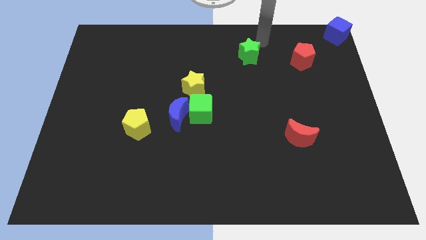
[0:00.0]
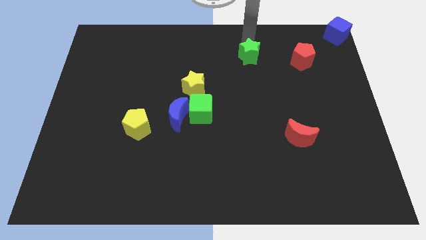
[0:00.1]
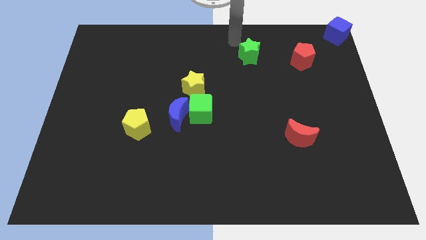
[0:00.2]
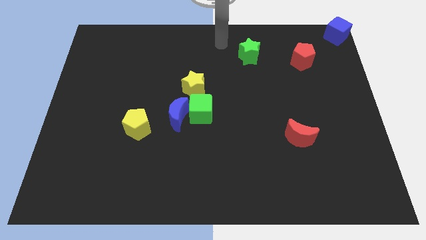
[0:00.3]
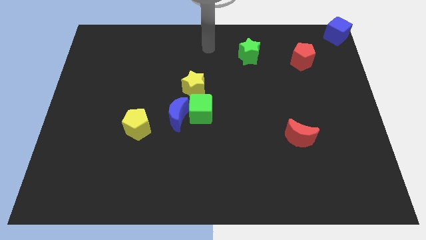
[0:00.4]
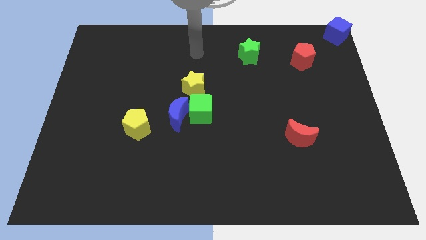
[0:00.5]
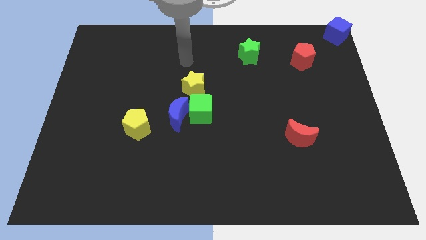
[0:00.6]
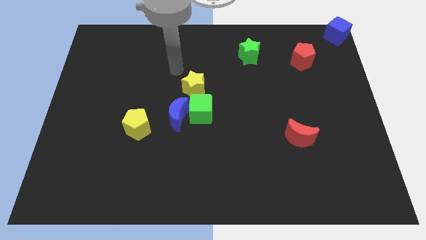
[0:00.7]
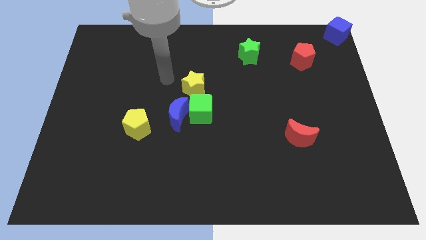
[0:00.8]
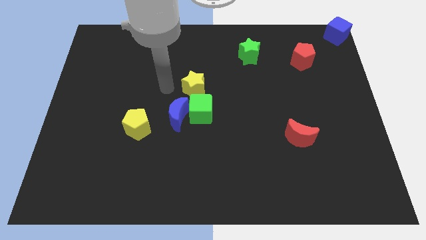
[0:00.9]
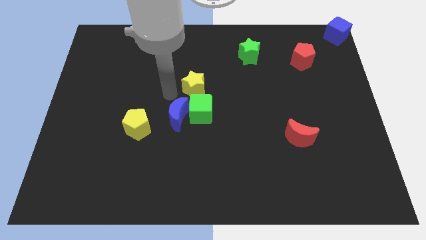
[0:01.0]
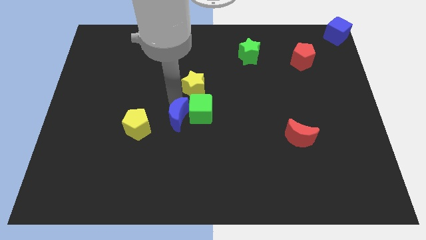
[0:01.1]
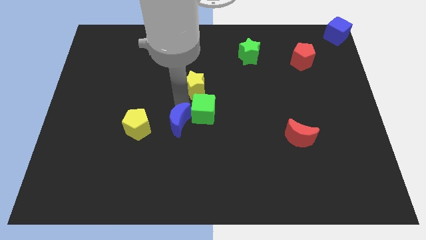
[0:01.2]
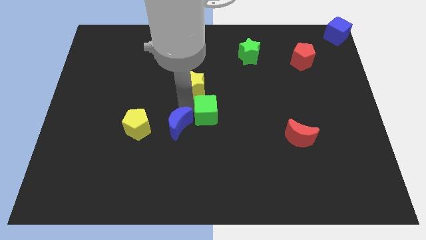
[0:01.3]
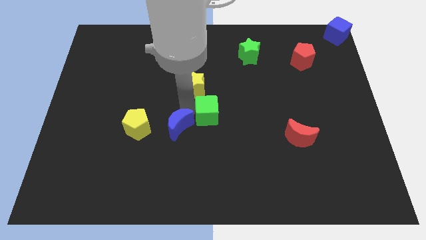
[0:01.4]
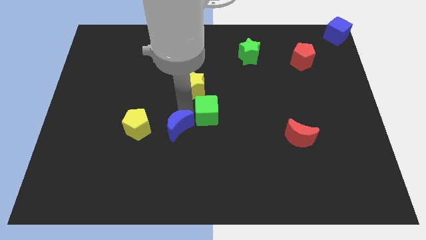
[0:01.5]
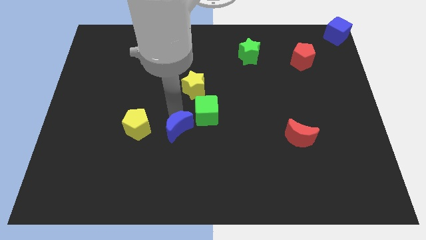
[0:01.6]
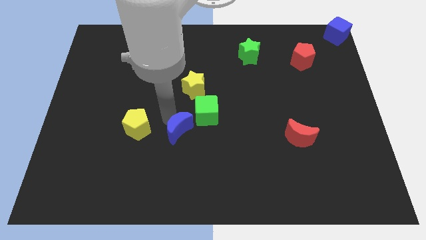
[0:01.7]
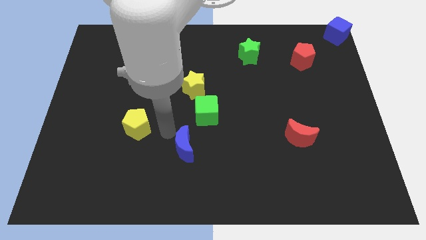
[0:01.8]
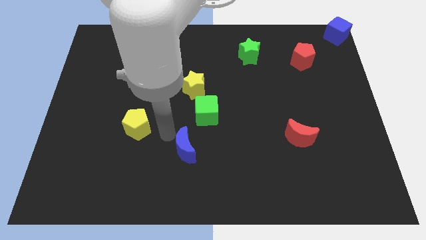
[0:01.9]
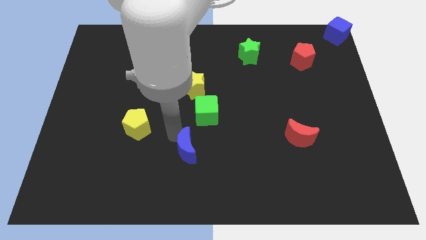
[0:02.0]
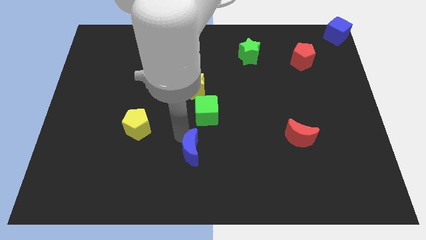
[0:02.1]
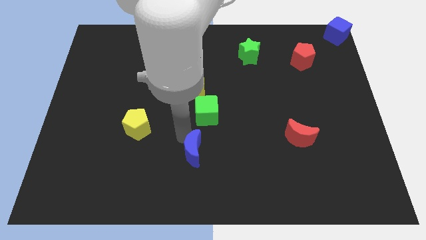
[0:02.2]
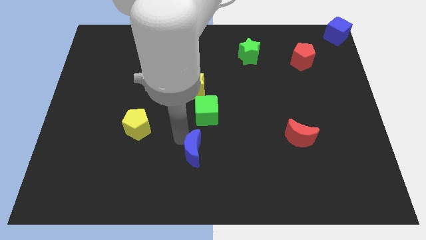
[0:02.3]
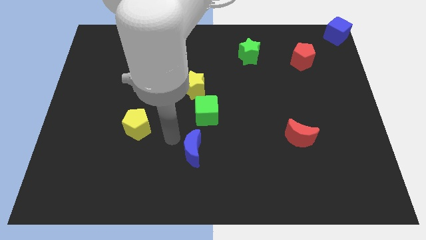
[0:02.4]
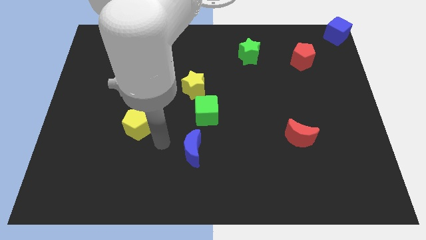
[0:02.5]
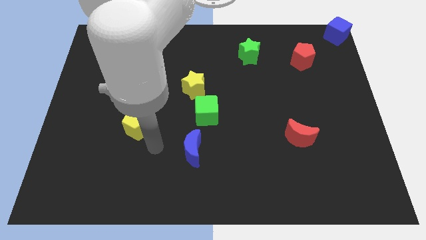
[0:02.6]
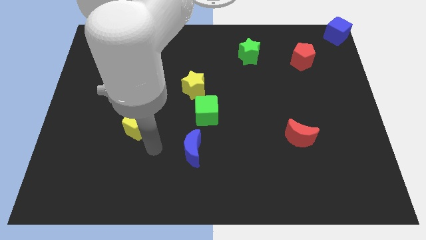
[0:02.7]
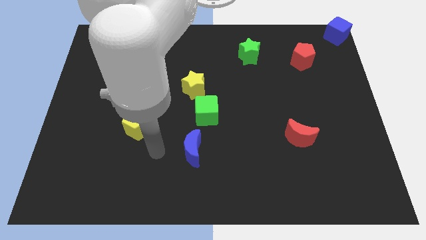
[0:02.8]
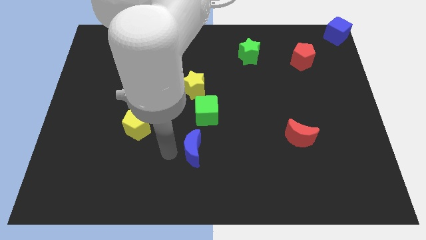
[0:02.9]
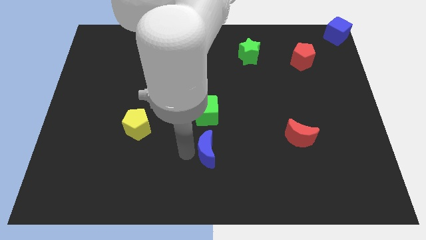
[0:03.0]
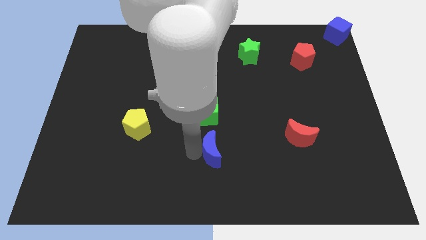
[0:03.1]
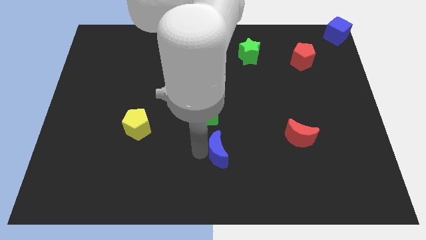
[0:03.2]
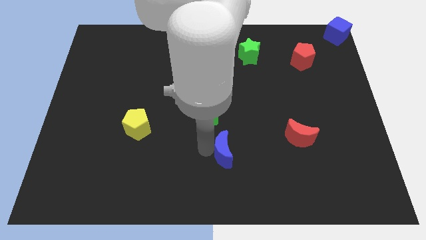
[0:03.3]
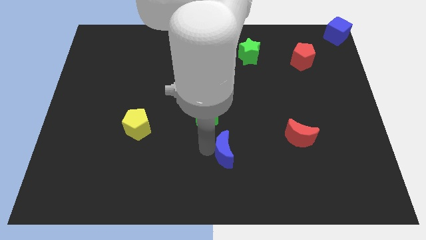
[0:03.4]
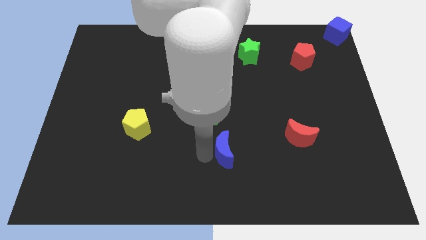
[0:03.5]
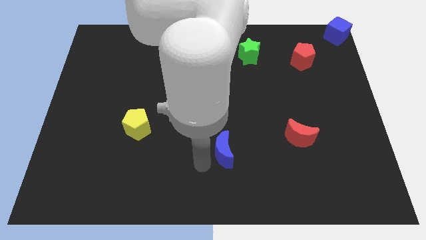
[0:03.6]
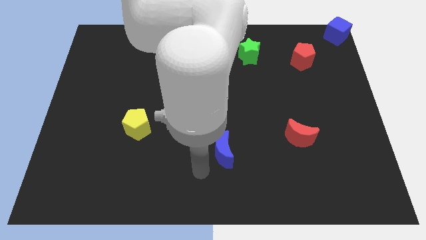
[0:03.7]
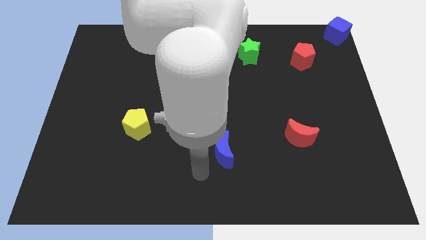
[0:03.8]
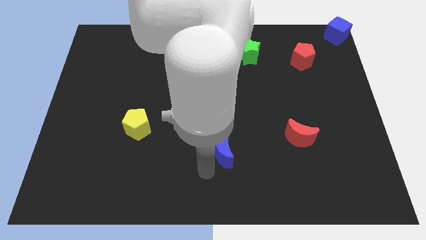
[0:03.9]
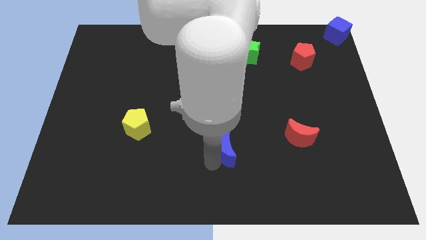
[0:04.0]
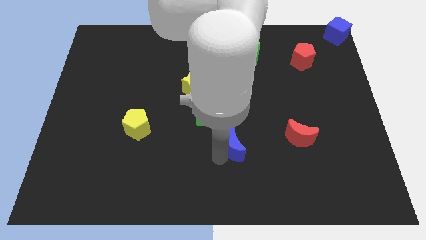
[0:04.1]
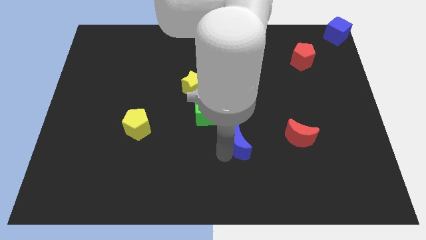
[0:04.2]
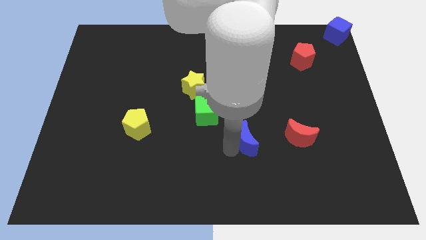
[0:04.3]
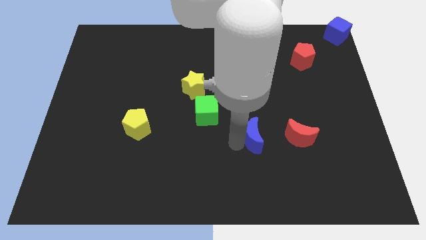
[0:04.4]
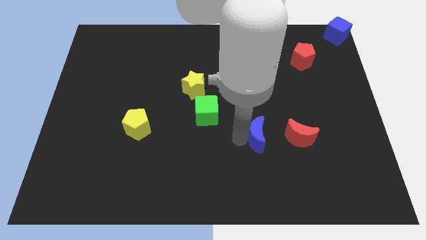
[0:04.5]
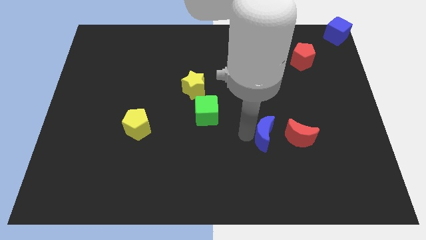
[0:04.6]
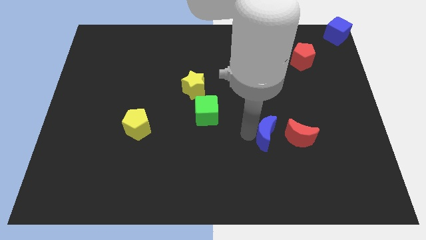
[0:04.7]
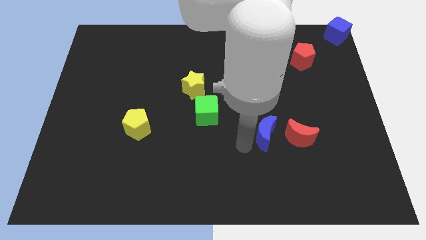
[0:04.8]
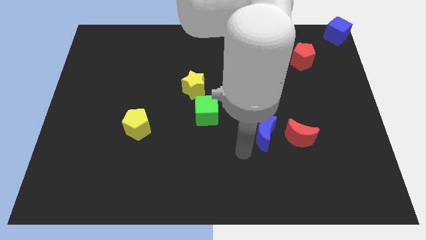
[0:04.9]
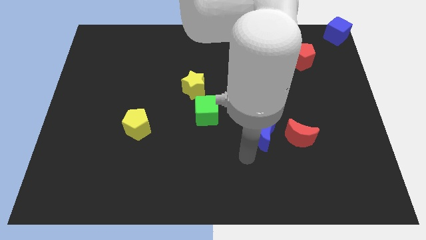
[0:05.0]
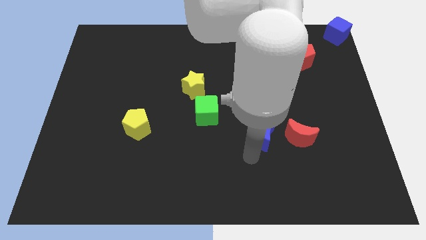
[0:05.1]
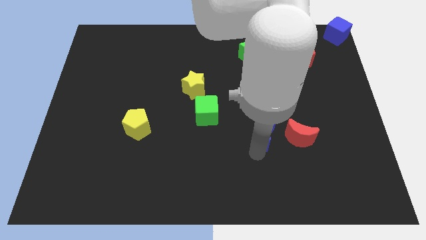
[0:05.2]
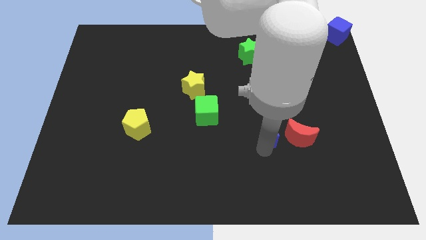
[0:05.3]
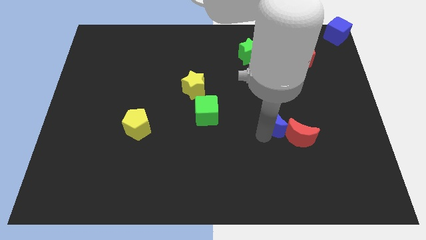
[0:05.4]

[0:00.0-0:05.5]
move the blue crescent into the red crescent

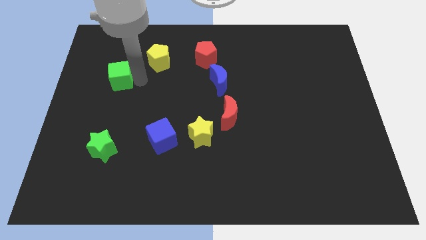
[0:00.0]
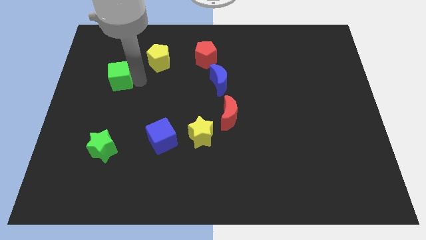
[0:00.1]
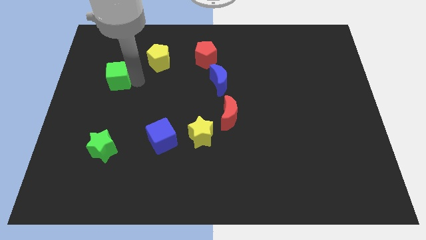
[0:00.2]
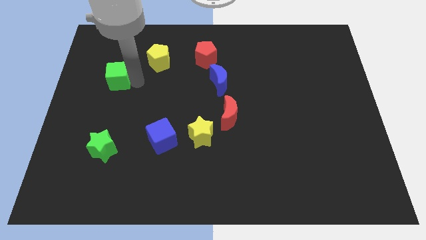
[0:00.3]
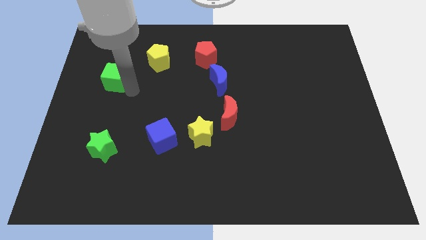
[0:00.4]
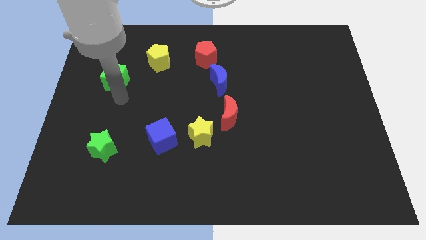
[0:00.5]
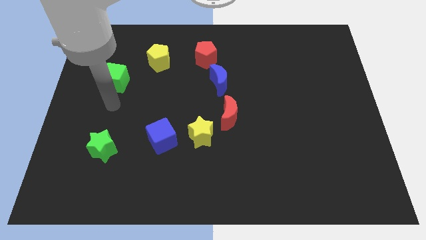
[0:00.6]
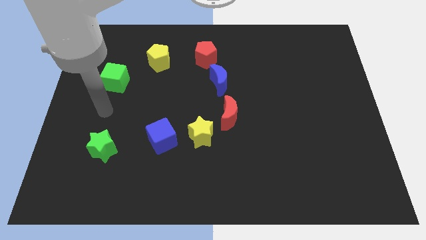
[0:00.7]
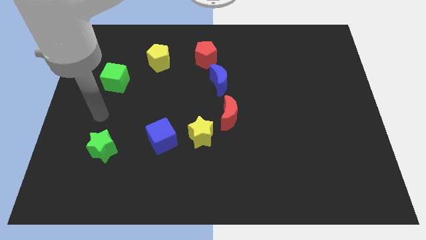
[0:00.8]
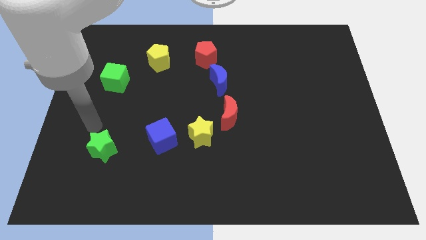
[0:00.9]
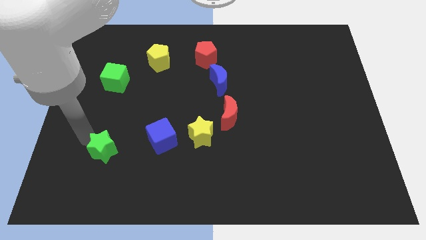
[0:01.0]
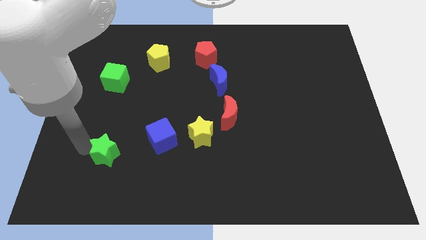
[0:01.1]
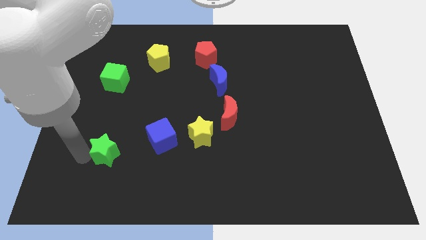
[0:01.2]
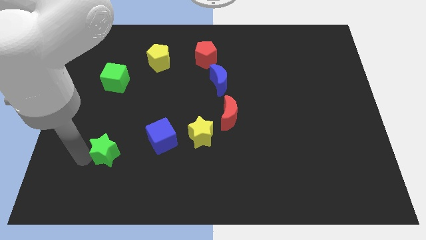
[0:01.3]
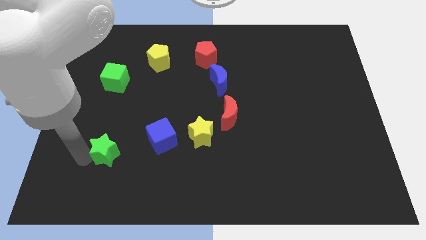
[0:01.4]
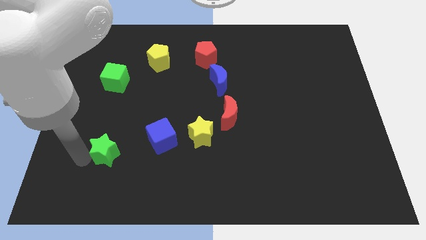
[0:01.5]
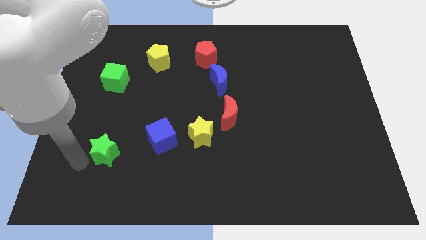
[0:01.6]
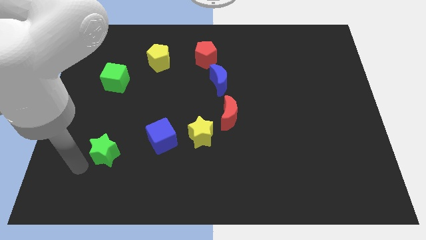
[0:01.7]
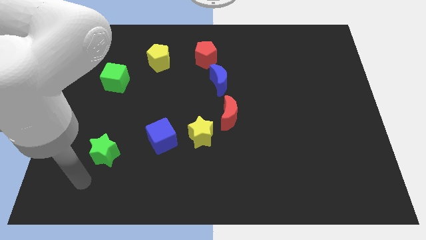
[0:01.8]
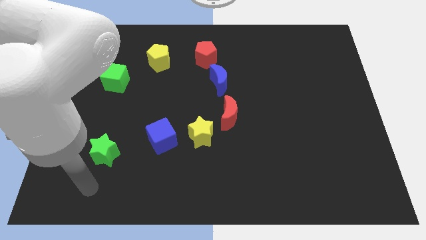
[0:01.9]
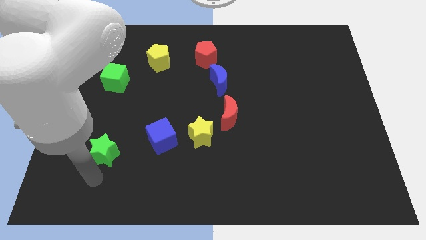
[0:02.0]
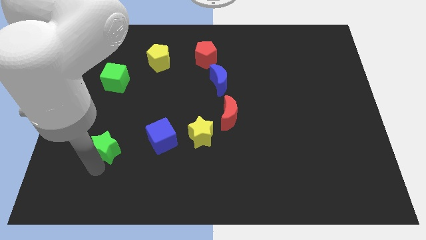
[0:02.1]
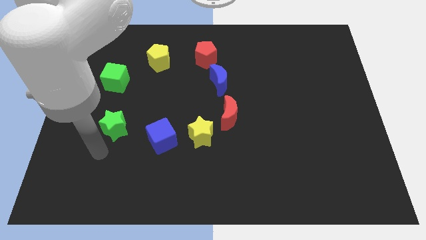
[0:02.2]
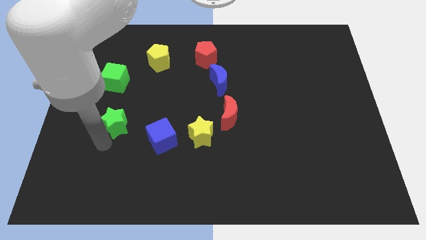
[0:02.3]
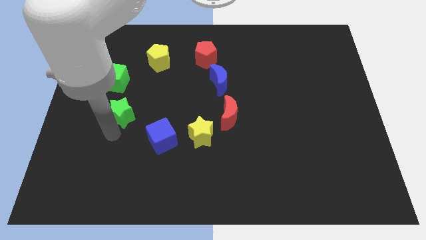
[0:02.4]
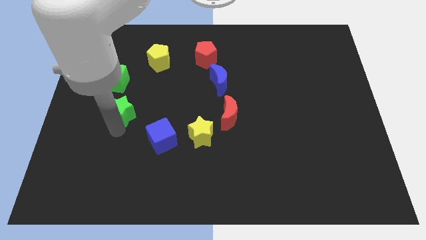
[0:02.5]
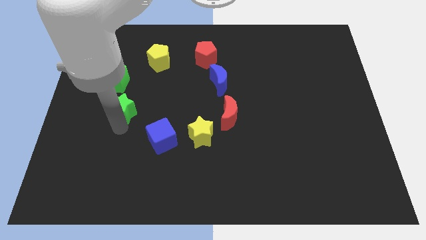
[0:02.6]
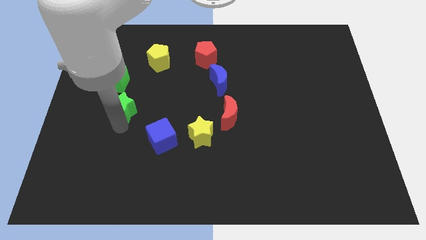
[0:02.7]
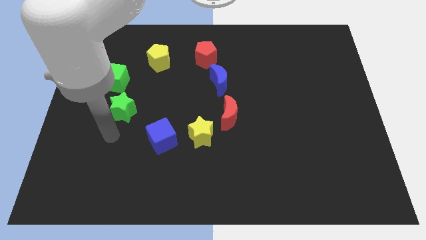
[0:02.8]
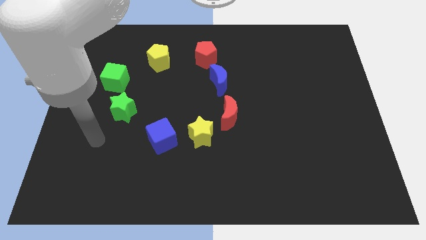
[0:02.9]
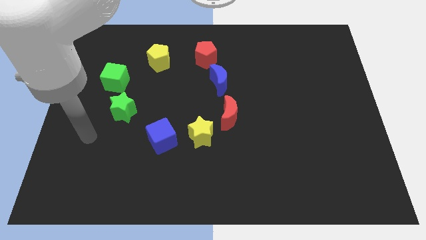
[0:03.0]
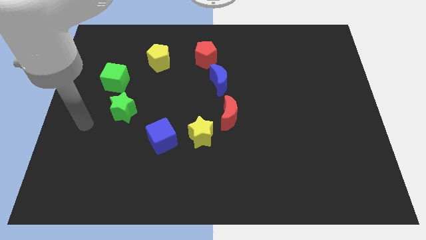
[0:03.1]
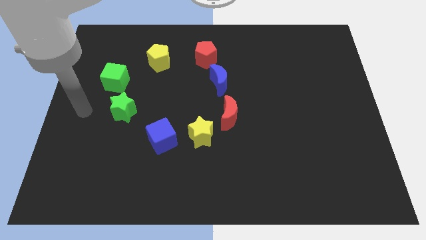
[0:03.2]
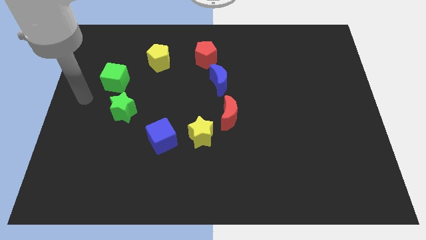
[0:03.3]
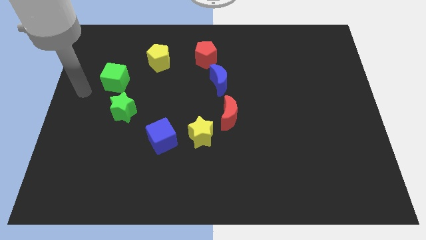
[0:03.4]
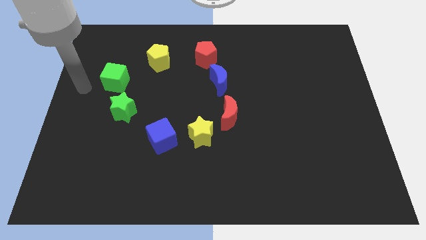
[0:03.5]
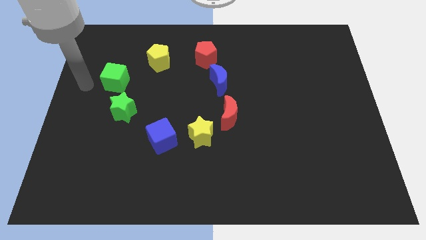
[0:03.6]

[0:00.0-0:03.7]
move green star diagonally below the green cube
